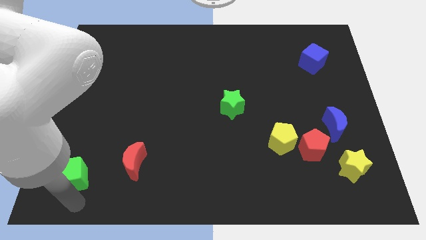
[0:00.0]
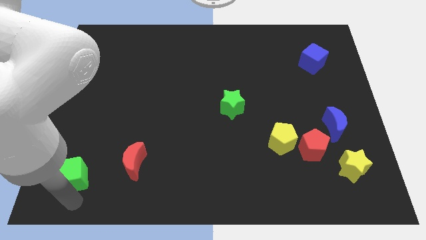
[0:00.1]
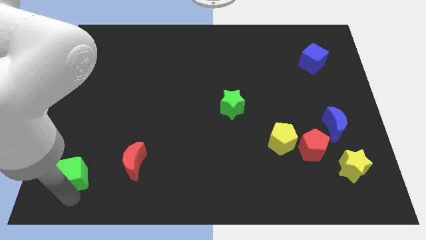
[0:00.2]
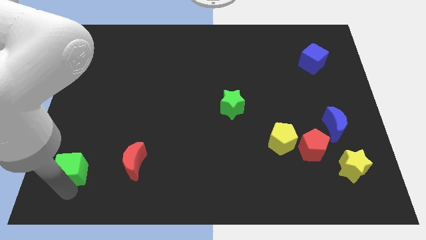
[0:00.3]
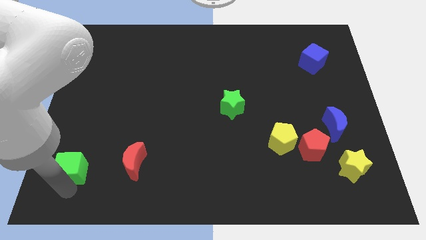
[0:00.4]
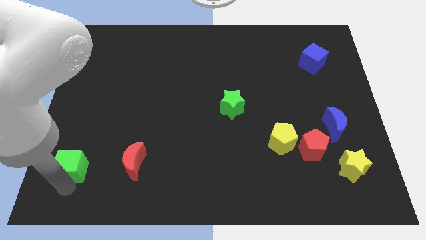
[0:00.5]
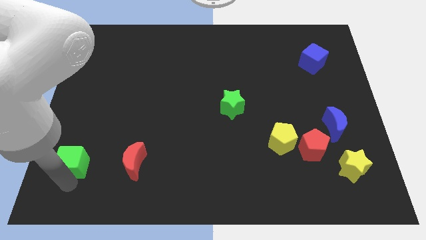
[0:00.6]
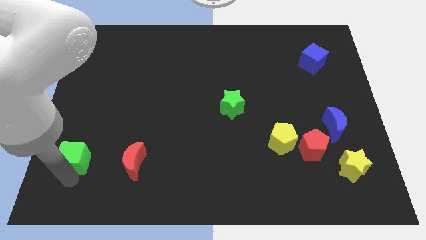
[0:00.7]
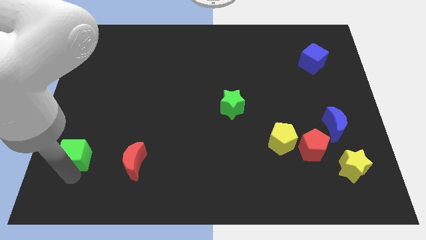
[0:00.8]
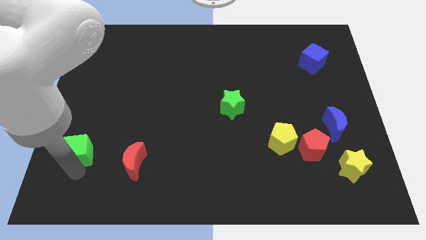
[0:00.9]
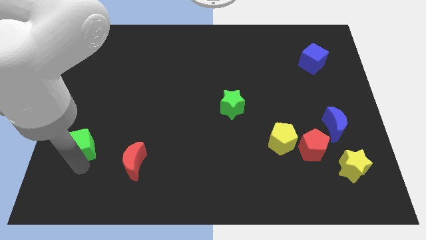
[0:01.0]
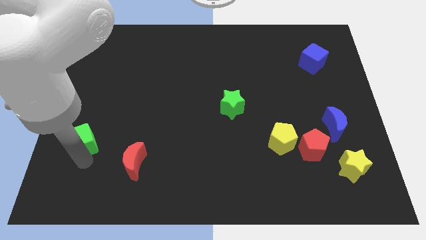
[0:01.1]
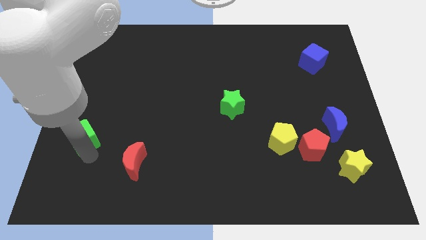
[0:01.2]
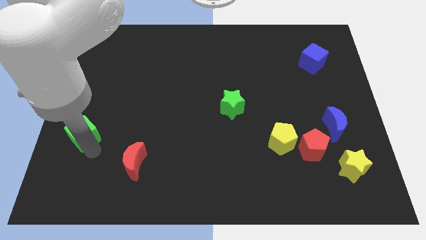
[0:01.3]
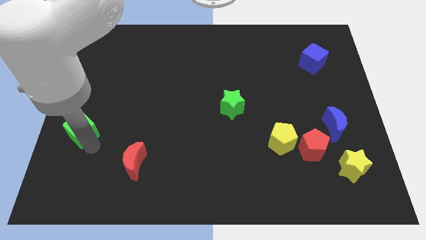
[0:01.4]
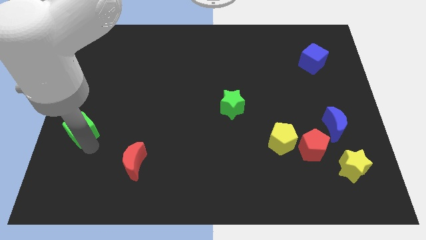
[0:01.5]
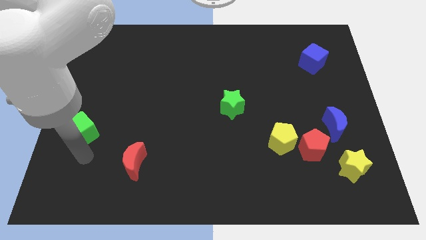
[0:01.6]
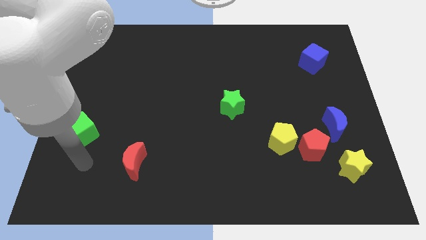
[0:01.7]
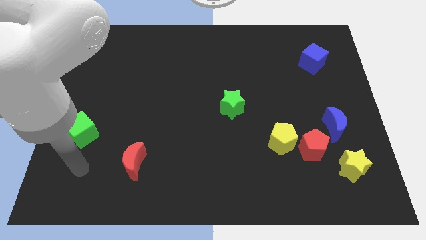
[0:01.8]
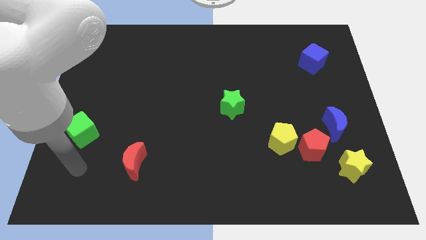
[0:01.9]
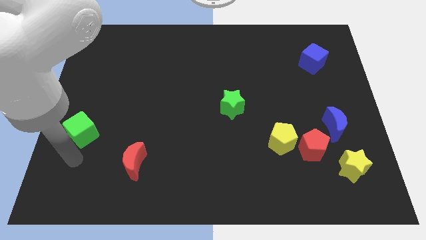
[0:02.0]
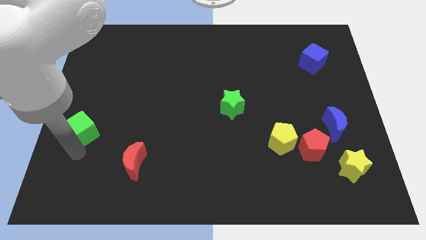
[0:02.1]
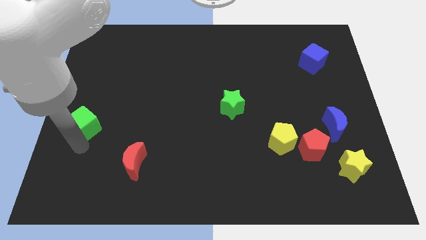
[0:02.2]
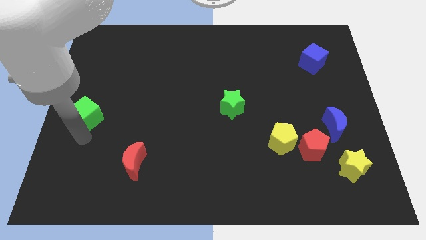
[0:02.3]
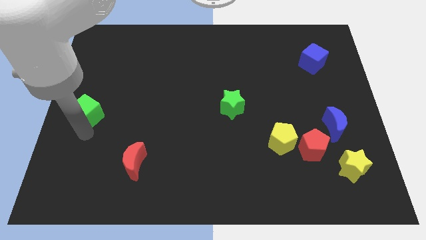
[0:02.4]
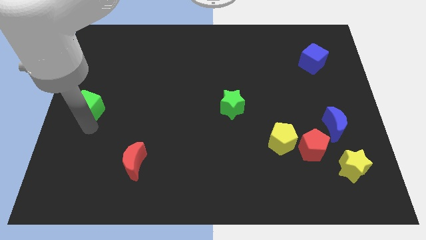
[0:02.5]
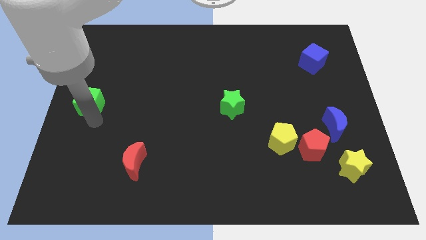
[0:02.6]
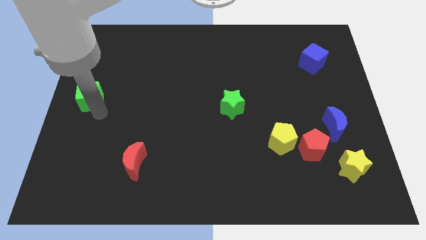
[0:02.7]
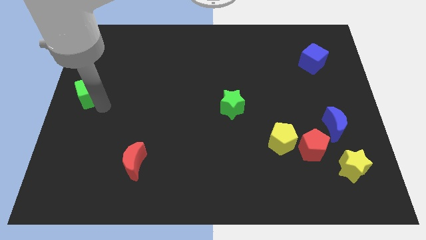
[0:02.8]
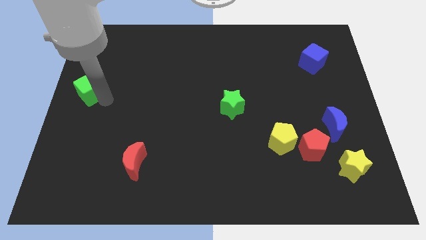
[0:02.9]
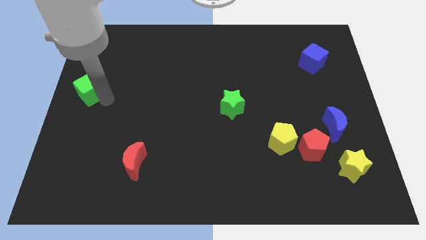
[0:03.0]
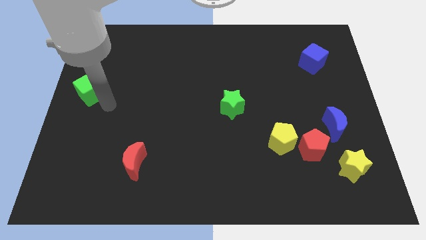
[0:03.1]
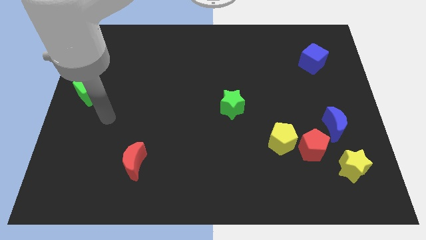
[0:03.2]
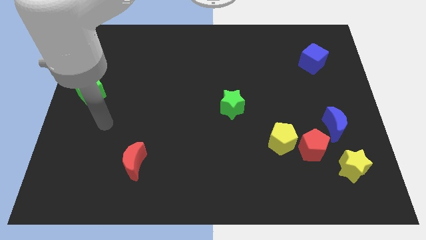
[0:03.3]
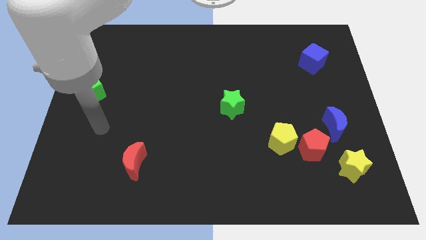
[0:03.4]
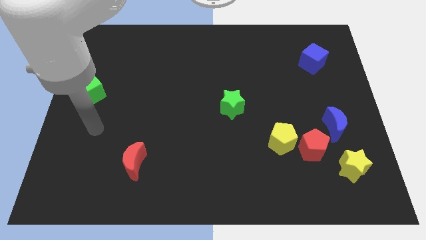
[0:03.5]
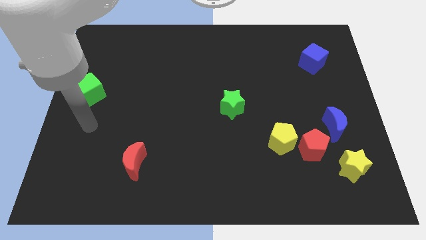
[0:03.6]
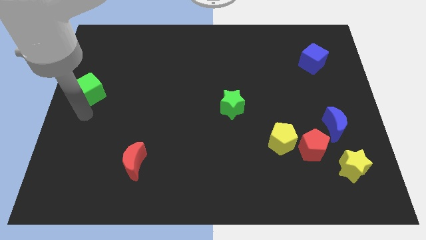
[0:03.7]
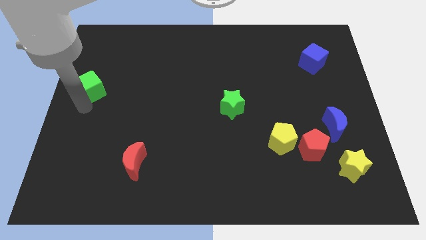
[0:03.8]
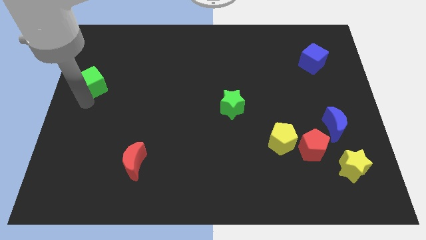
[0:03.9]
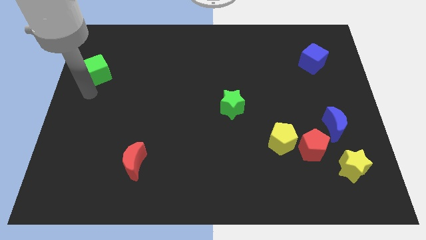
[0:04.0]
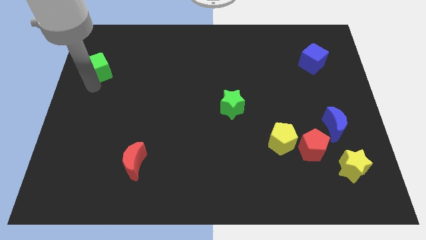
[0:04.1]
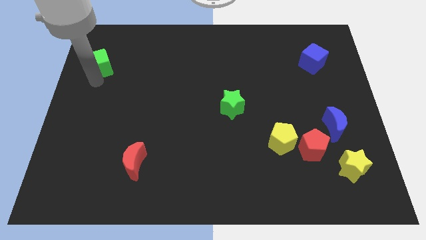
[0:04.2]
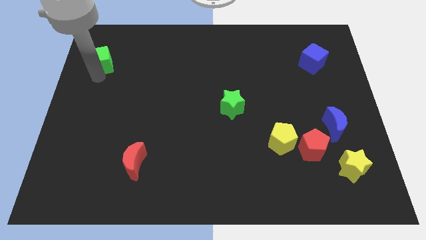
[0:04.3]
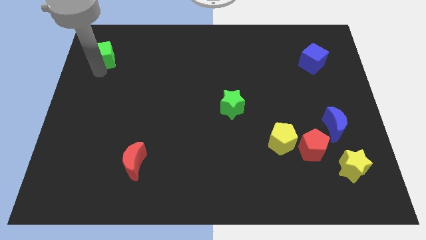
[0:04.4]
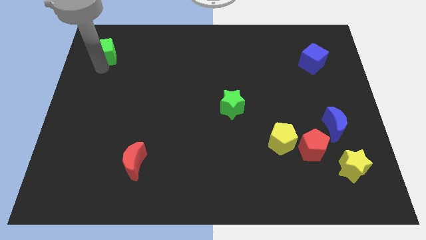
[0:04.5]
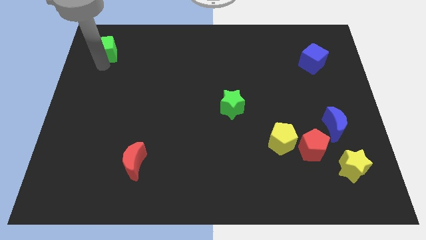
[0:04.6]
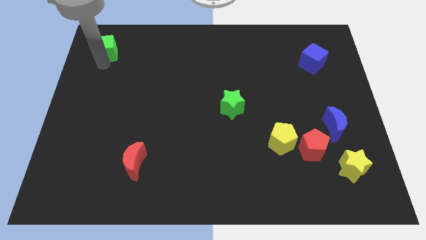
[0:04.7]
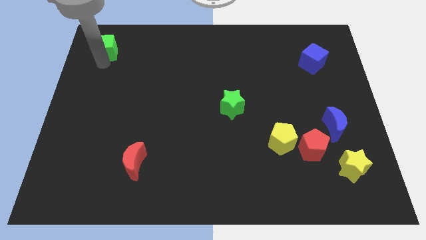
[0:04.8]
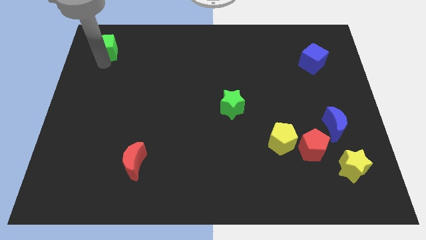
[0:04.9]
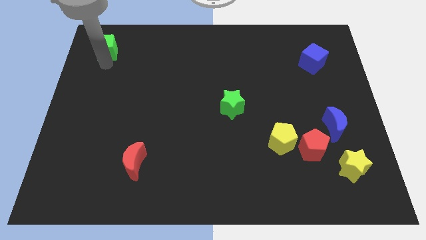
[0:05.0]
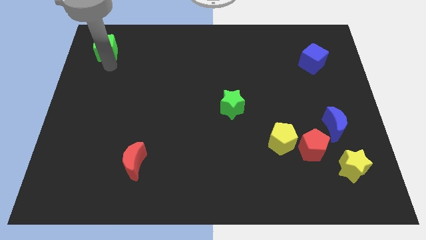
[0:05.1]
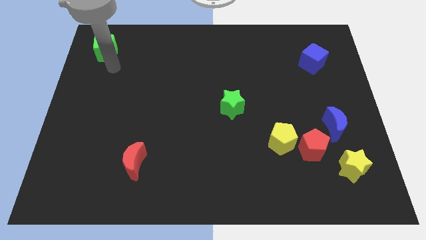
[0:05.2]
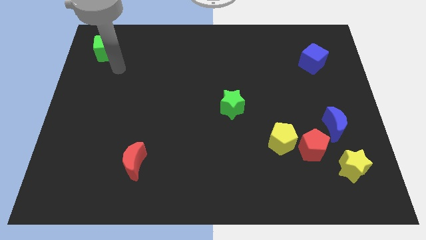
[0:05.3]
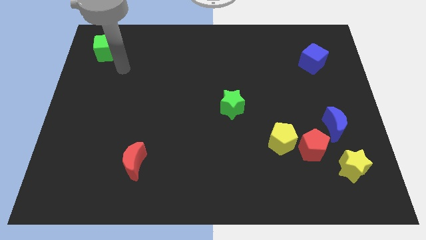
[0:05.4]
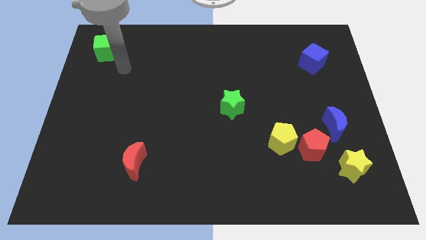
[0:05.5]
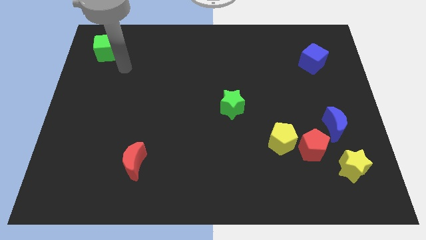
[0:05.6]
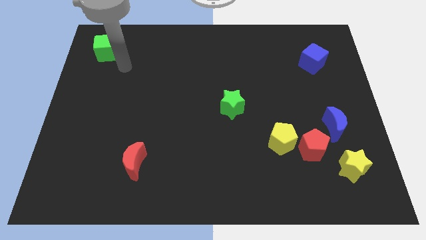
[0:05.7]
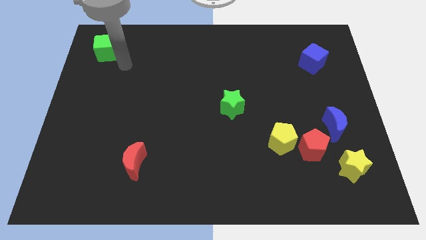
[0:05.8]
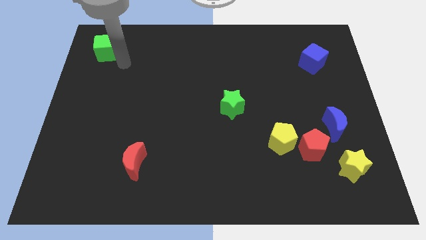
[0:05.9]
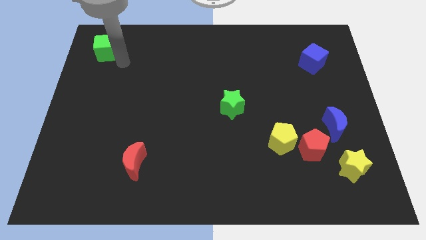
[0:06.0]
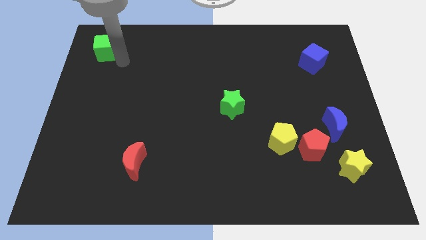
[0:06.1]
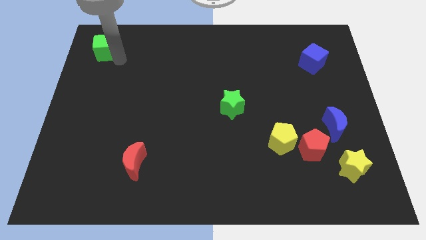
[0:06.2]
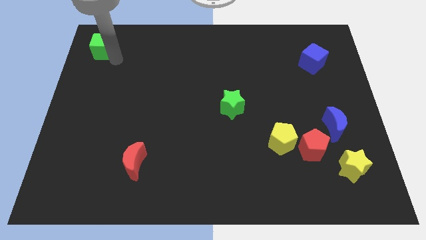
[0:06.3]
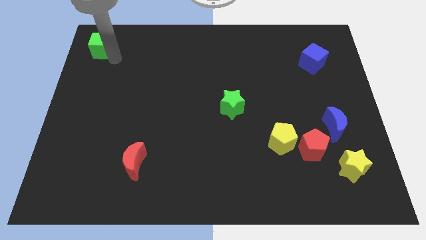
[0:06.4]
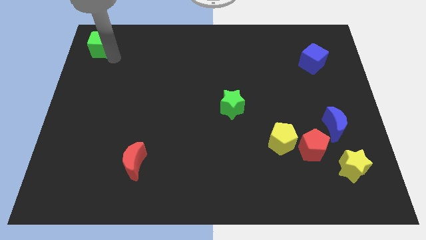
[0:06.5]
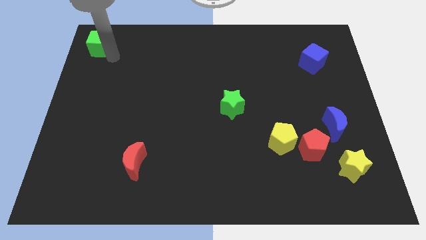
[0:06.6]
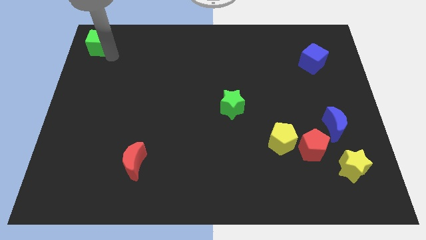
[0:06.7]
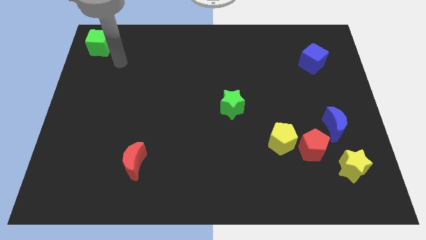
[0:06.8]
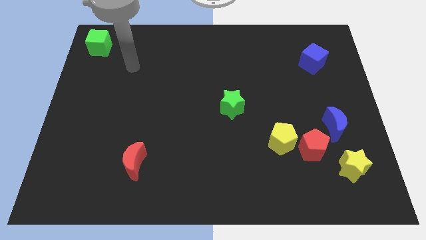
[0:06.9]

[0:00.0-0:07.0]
move the green square to the top left

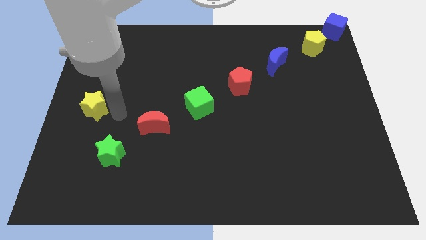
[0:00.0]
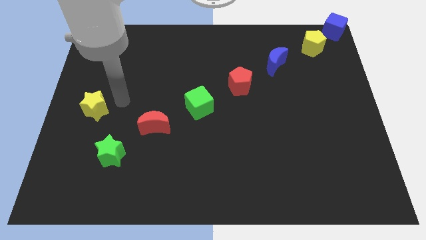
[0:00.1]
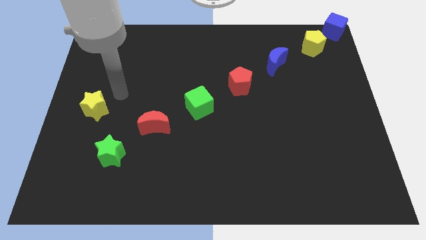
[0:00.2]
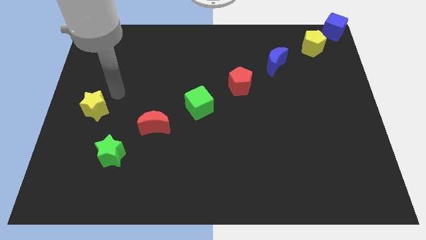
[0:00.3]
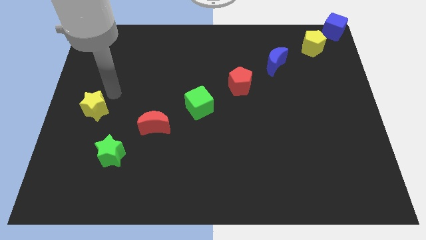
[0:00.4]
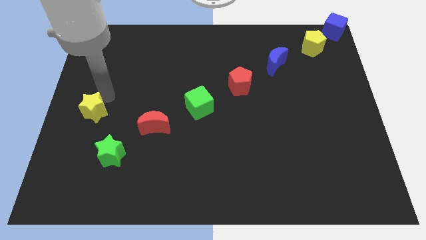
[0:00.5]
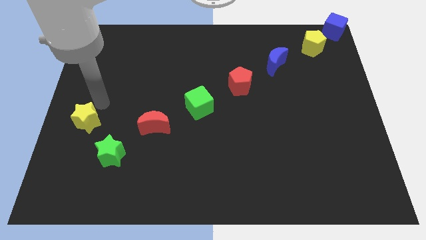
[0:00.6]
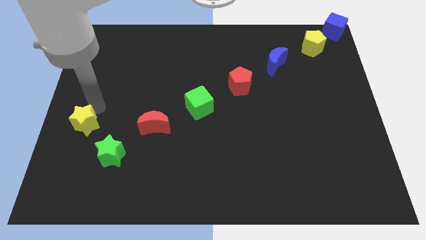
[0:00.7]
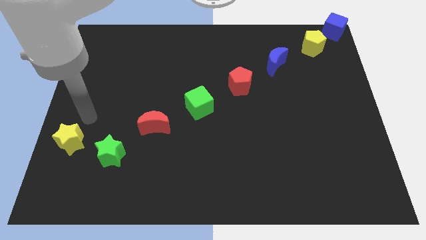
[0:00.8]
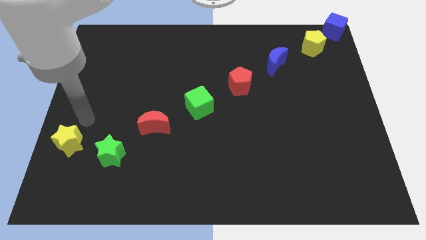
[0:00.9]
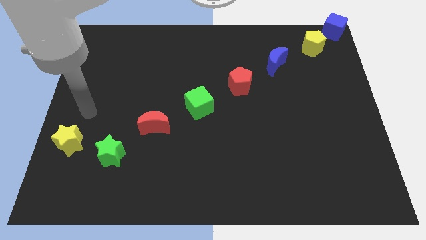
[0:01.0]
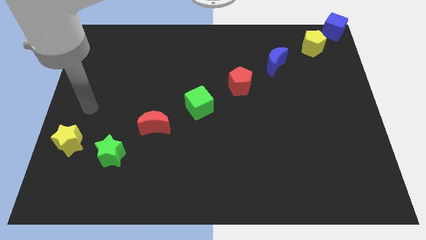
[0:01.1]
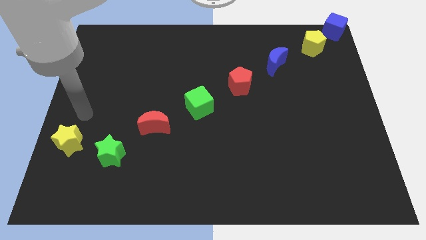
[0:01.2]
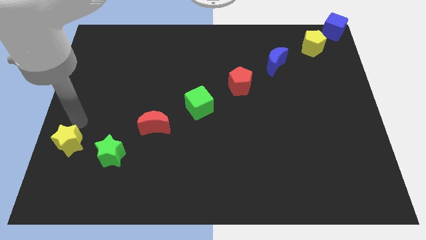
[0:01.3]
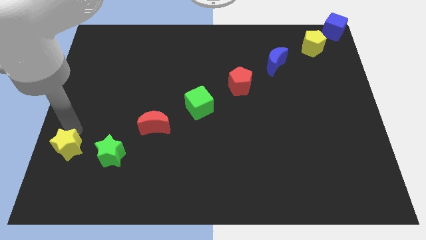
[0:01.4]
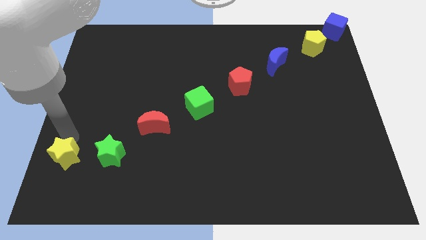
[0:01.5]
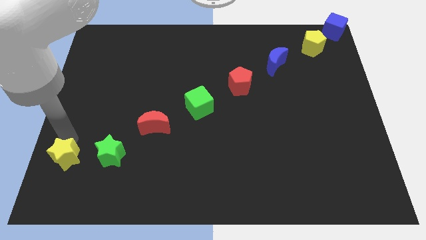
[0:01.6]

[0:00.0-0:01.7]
place the yellow star left to the green star

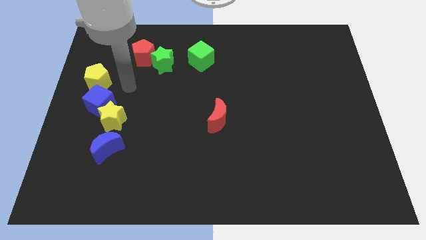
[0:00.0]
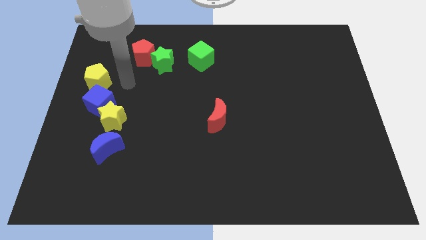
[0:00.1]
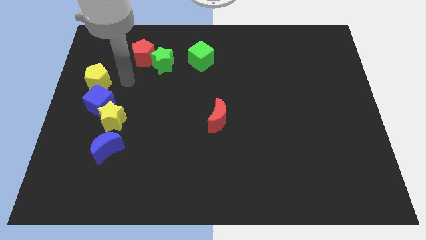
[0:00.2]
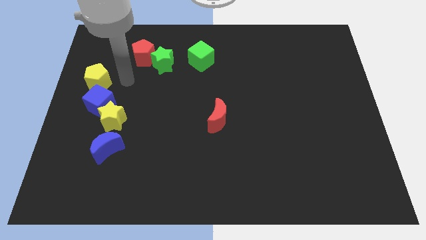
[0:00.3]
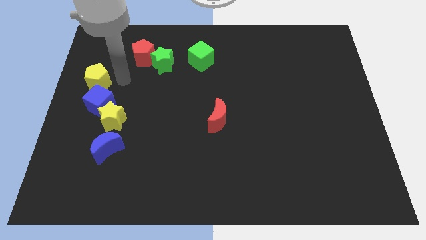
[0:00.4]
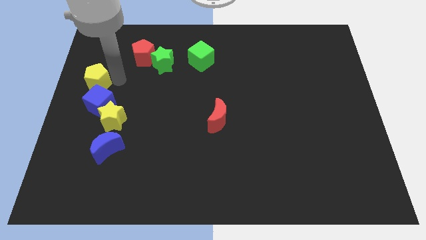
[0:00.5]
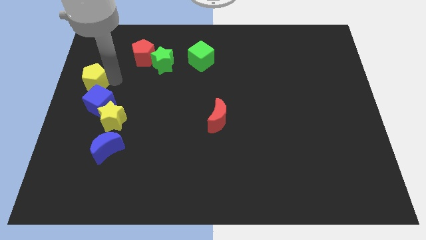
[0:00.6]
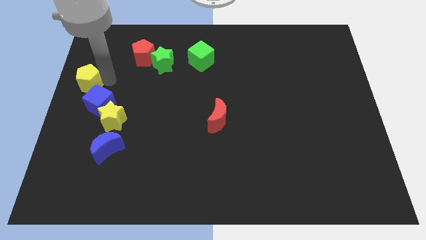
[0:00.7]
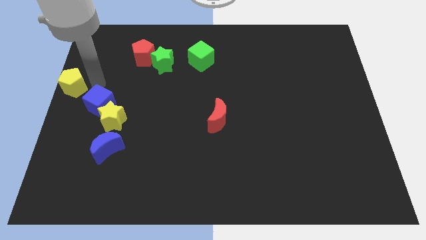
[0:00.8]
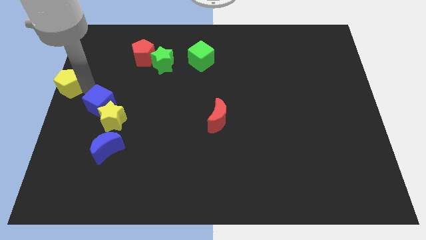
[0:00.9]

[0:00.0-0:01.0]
move the yellow pentagon to the center left of the board
